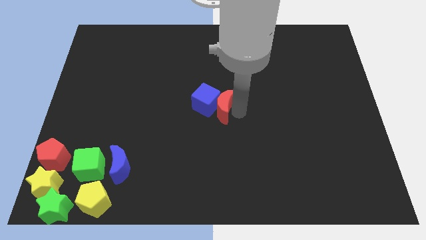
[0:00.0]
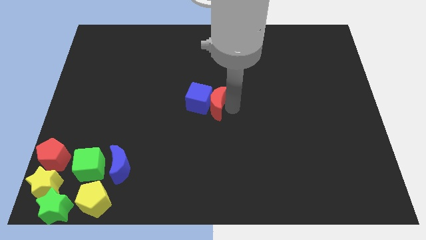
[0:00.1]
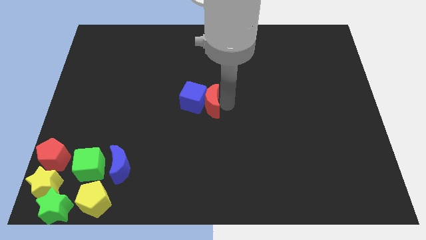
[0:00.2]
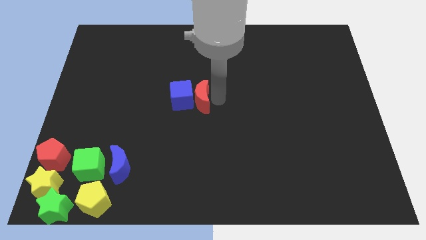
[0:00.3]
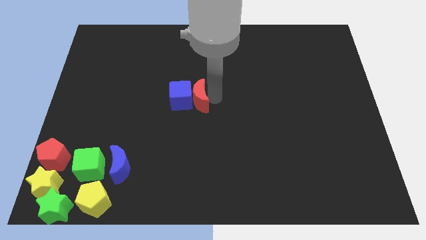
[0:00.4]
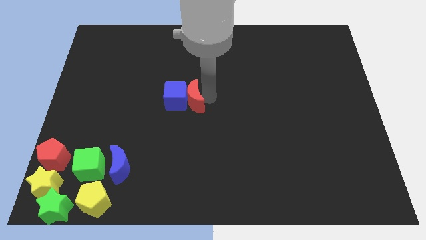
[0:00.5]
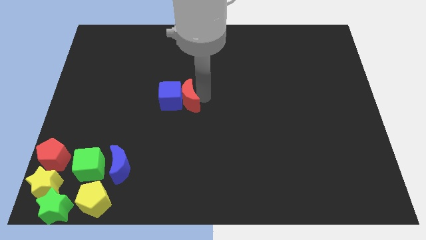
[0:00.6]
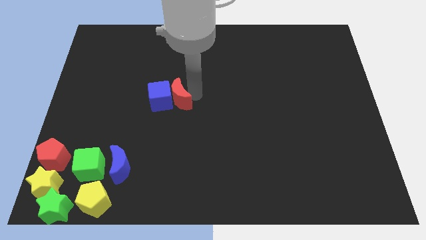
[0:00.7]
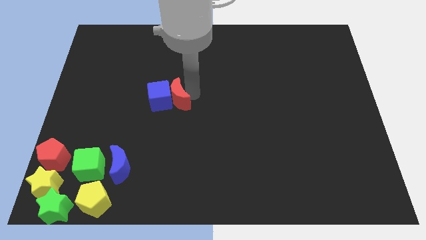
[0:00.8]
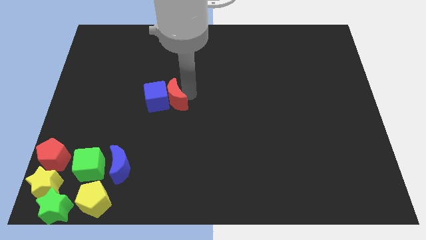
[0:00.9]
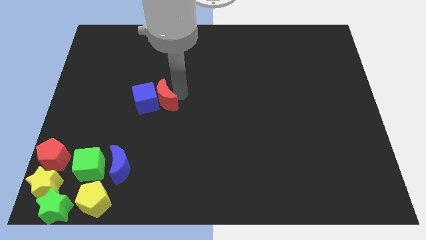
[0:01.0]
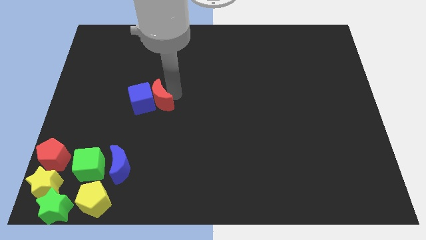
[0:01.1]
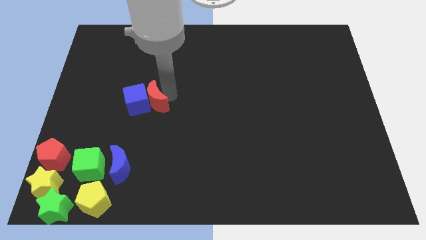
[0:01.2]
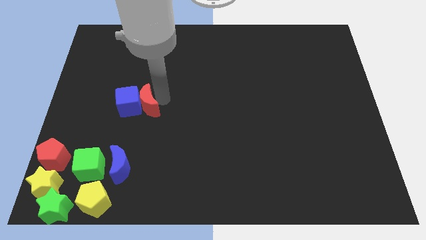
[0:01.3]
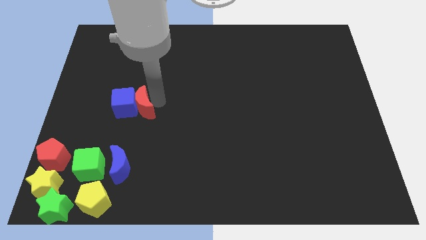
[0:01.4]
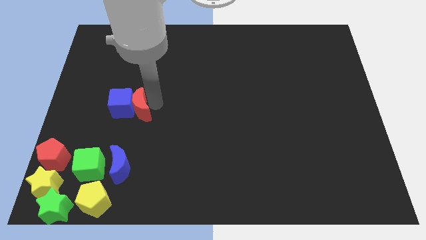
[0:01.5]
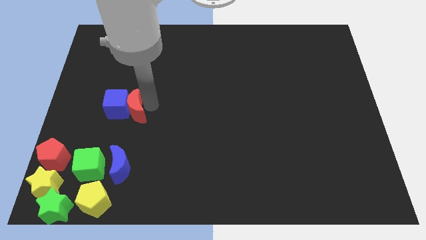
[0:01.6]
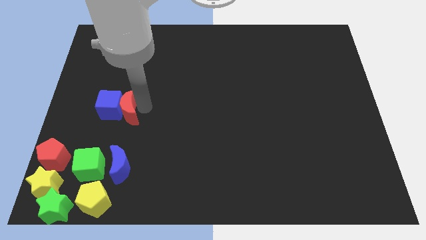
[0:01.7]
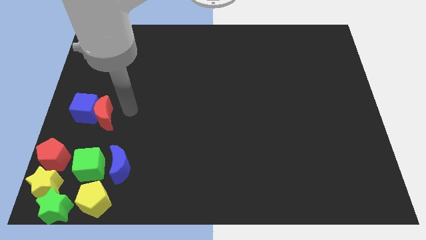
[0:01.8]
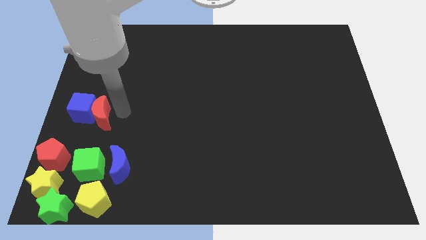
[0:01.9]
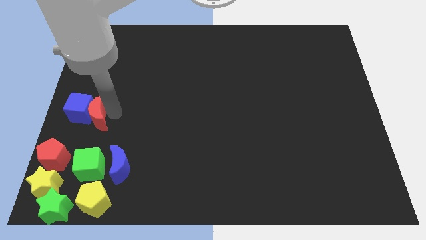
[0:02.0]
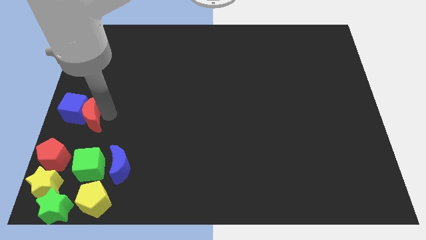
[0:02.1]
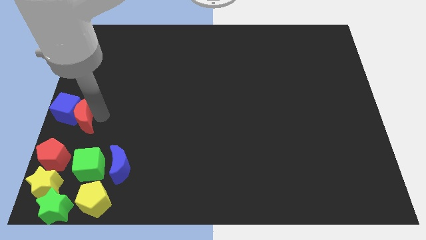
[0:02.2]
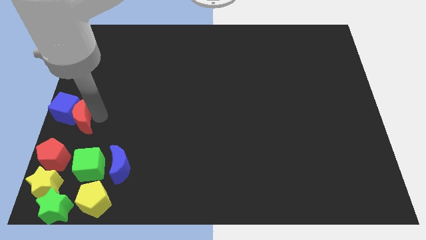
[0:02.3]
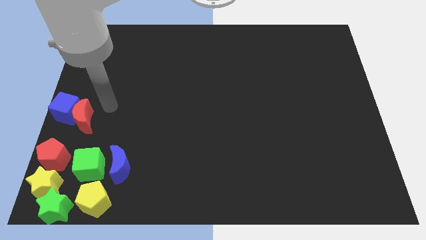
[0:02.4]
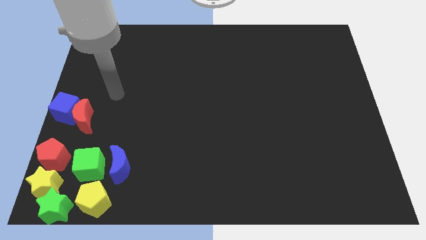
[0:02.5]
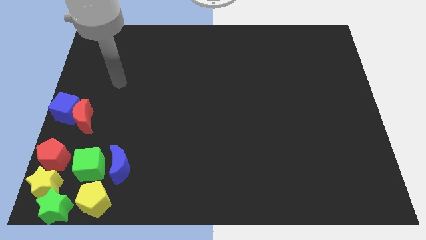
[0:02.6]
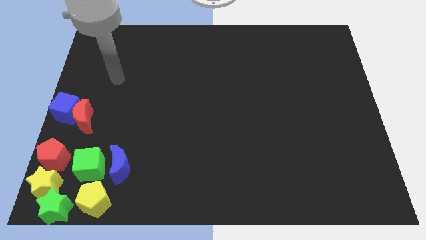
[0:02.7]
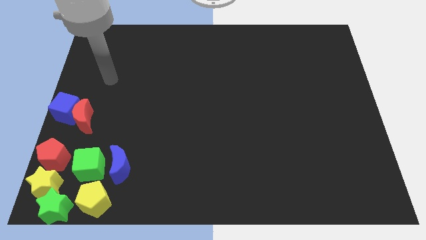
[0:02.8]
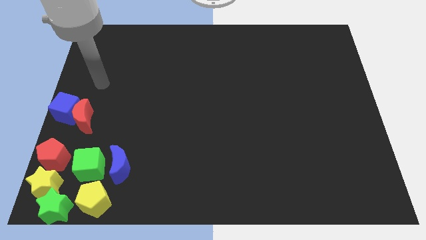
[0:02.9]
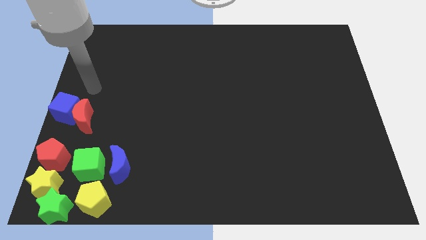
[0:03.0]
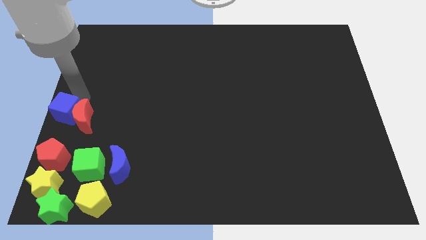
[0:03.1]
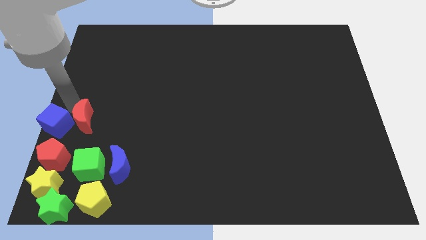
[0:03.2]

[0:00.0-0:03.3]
add both the blue cube and red moon to the group of blocks

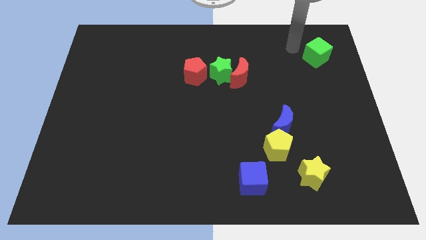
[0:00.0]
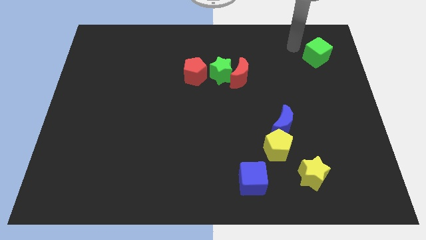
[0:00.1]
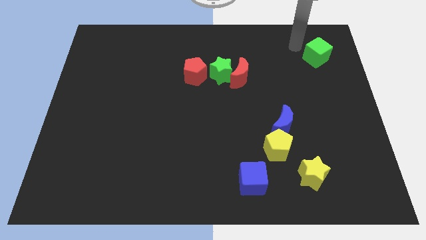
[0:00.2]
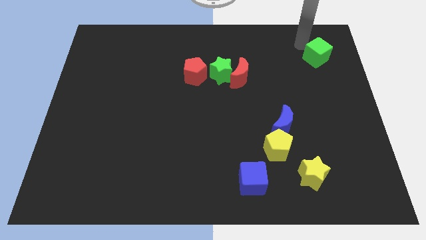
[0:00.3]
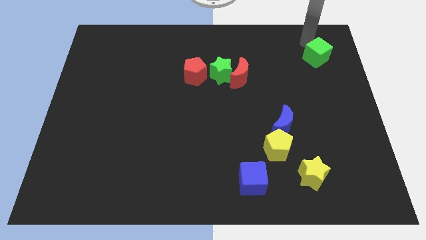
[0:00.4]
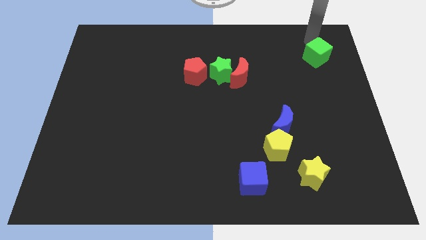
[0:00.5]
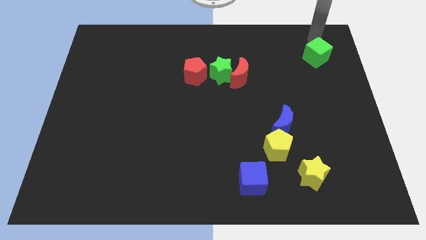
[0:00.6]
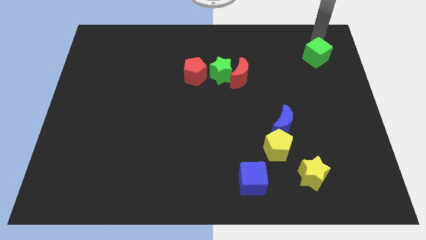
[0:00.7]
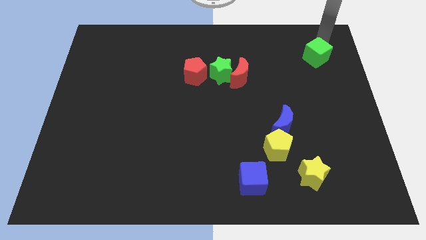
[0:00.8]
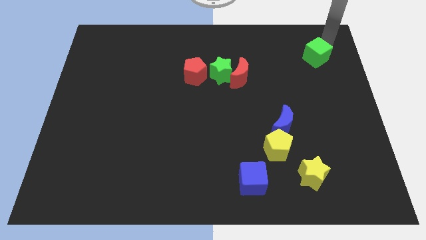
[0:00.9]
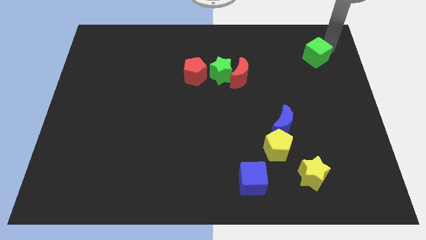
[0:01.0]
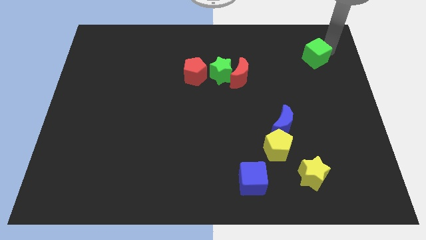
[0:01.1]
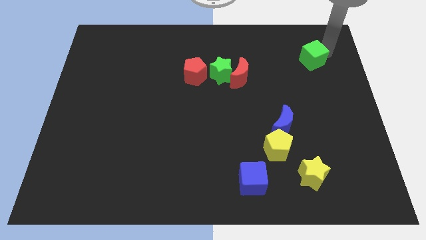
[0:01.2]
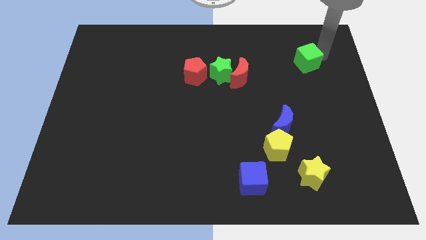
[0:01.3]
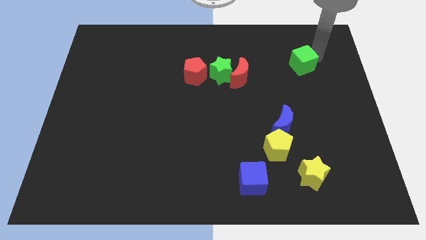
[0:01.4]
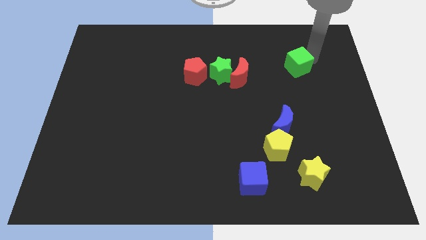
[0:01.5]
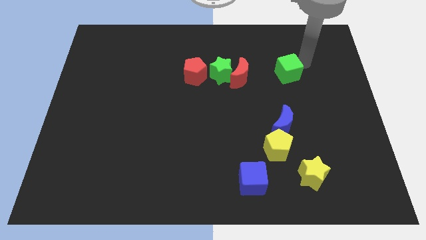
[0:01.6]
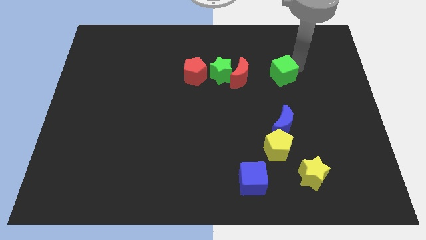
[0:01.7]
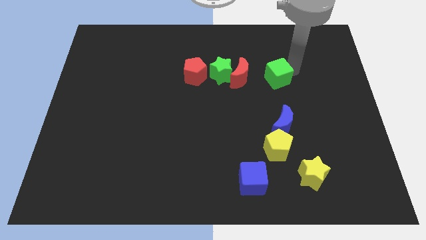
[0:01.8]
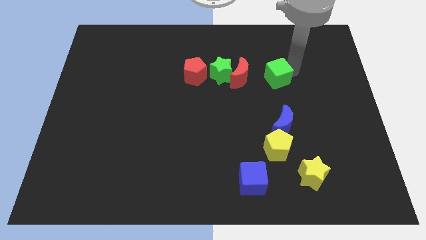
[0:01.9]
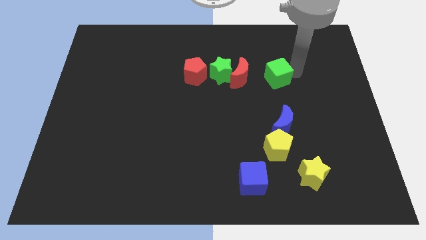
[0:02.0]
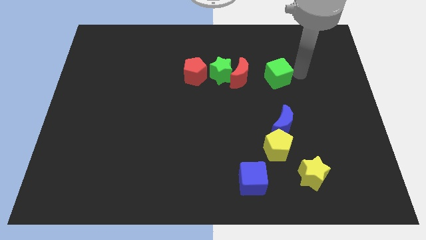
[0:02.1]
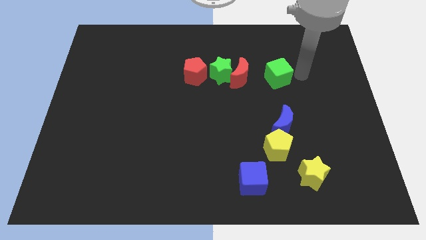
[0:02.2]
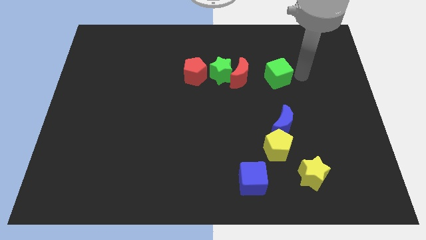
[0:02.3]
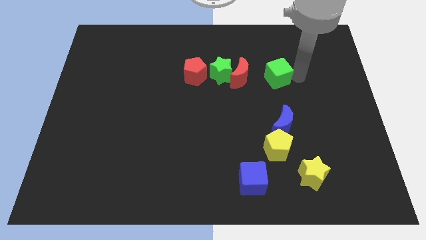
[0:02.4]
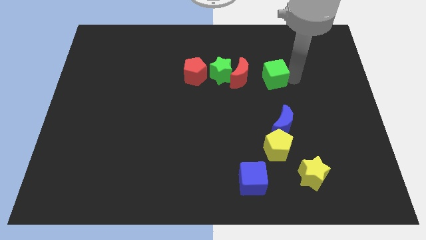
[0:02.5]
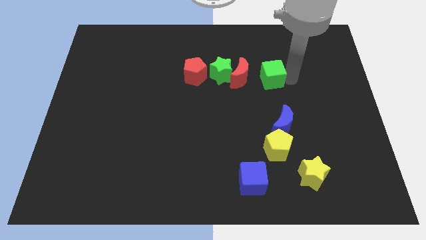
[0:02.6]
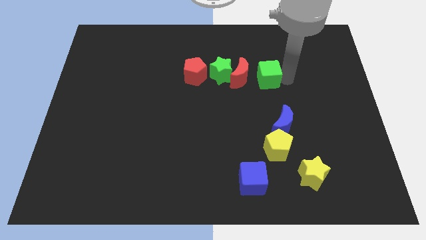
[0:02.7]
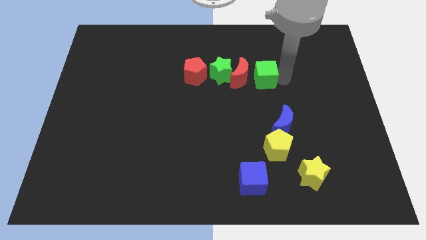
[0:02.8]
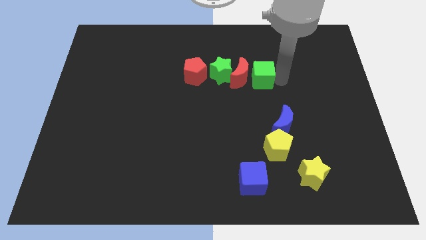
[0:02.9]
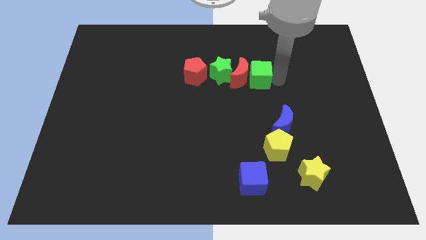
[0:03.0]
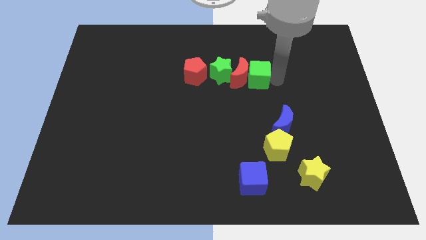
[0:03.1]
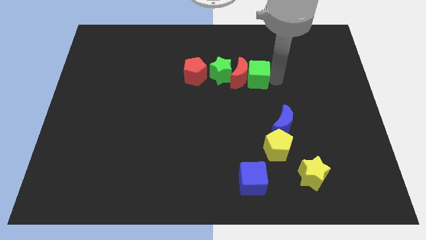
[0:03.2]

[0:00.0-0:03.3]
move green cube right beside the red moon

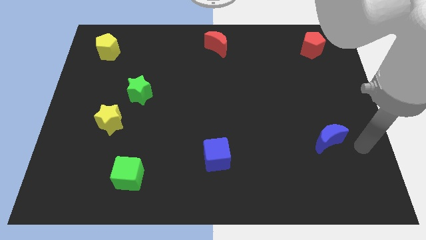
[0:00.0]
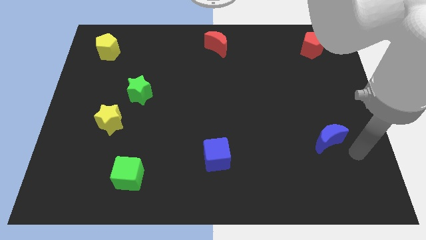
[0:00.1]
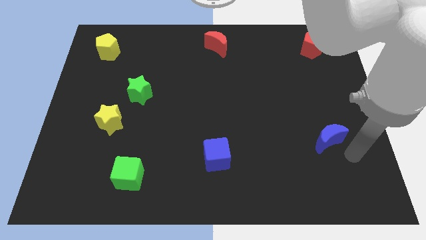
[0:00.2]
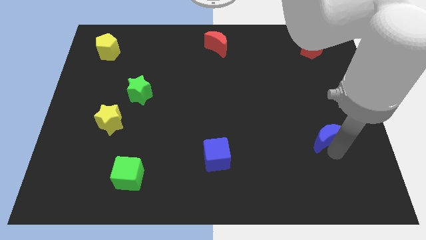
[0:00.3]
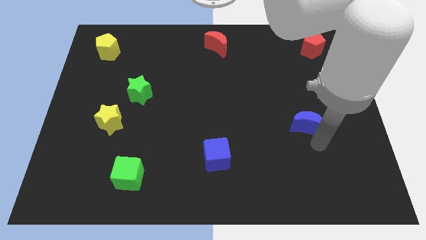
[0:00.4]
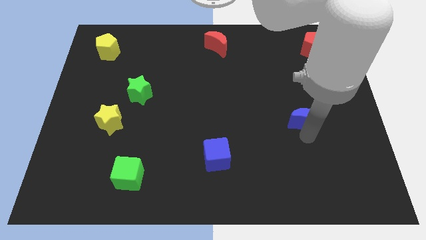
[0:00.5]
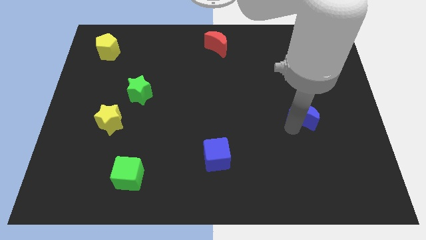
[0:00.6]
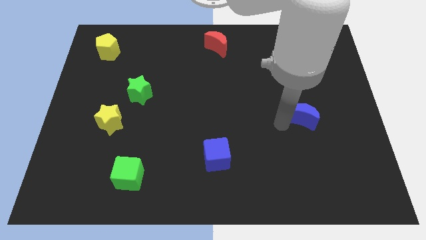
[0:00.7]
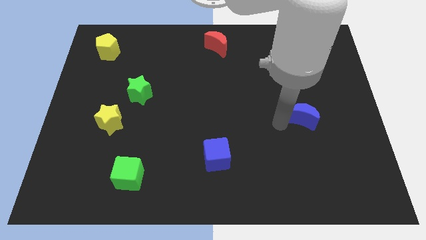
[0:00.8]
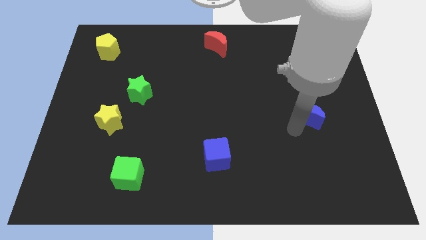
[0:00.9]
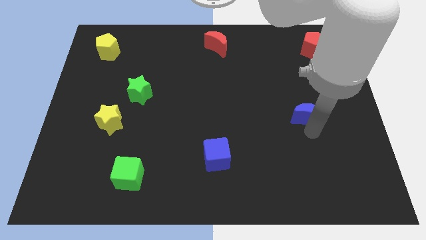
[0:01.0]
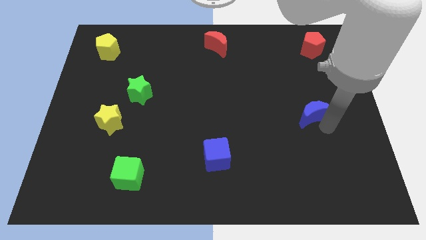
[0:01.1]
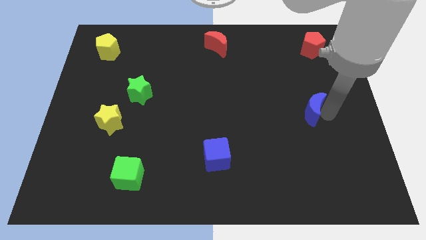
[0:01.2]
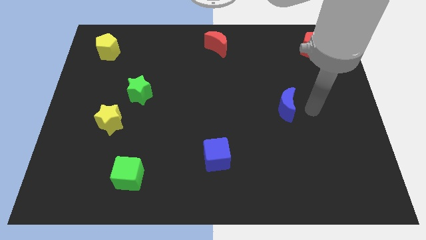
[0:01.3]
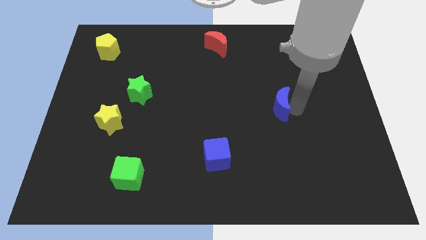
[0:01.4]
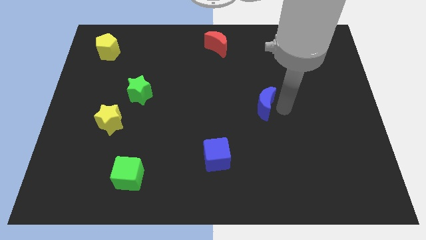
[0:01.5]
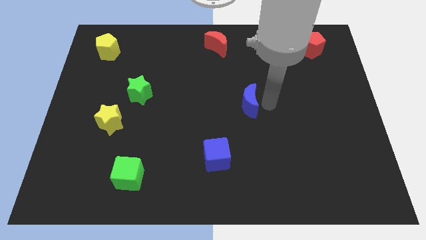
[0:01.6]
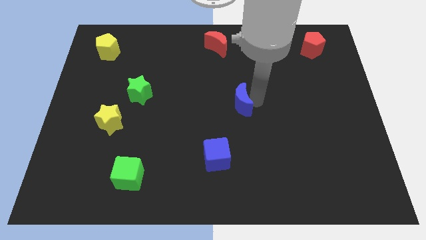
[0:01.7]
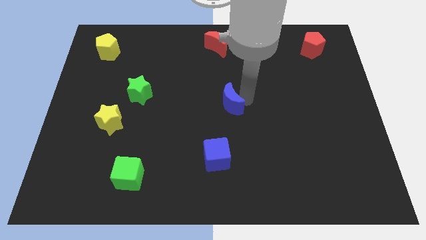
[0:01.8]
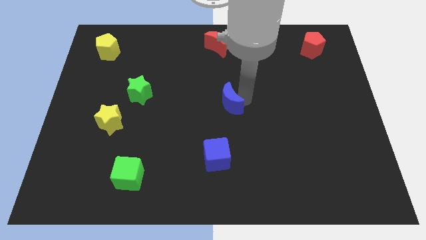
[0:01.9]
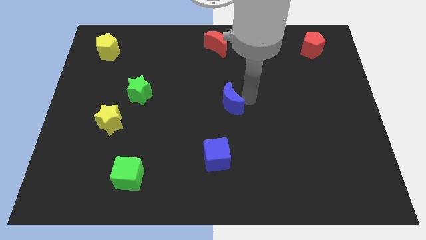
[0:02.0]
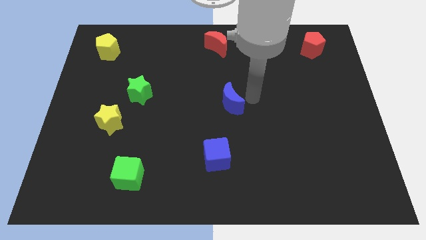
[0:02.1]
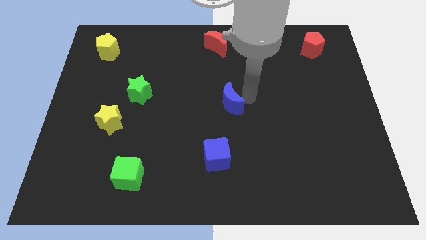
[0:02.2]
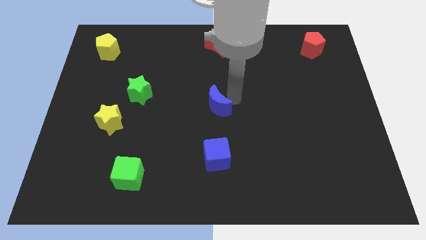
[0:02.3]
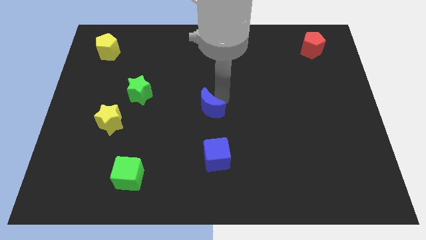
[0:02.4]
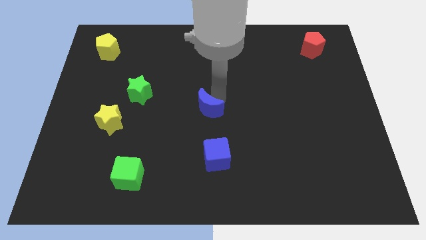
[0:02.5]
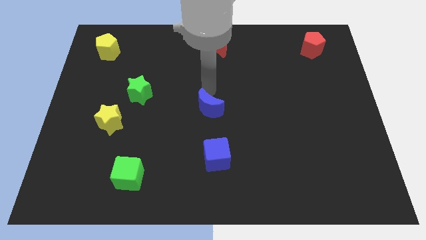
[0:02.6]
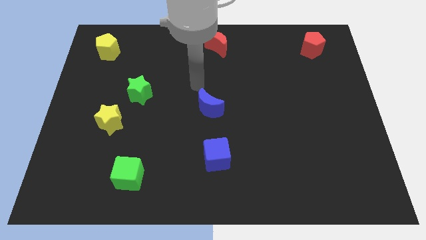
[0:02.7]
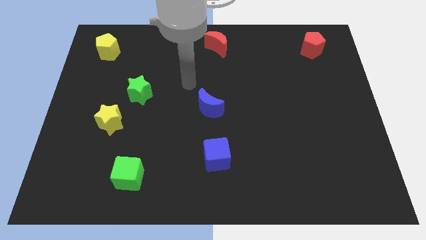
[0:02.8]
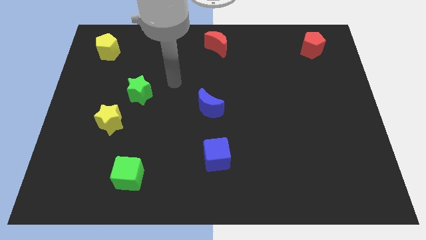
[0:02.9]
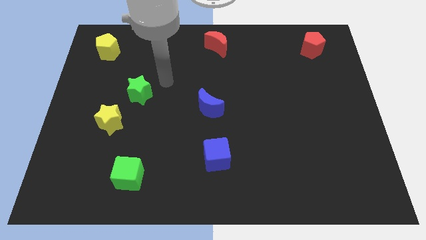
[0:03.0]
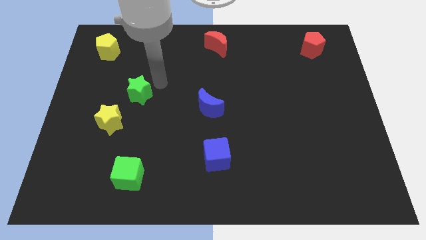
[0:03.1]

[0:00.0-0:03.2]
place the blue crescent to the center of the board
